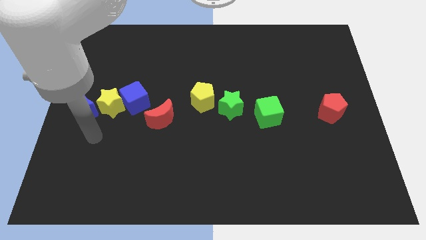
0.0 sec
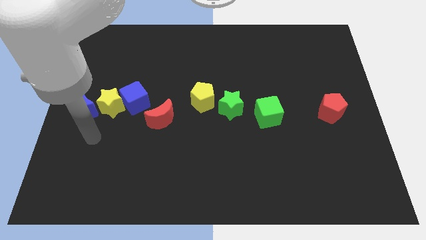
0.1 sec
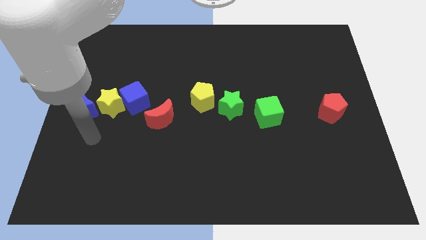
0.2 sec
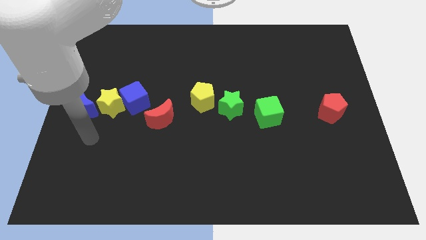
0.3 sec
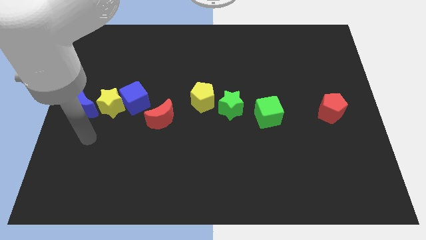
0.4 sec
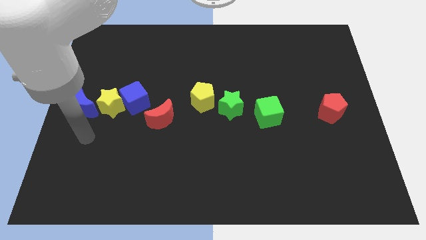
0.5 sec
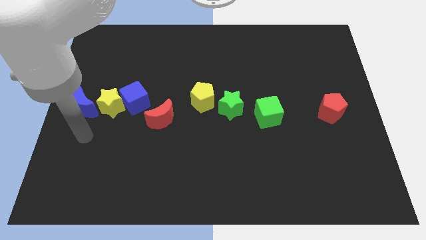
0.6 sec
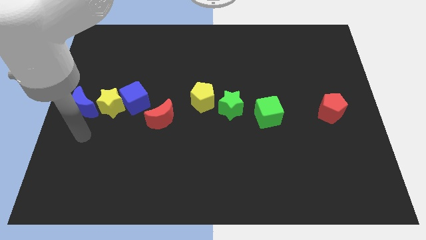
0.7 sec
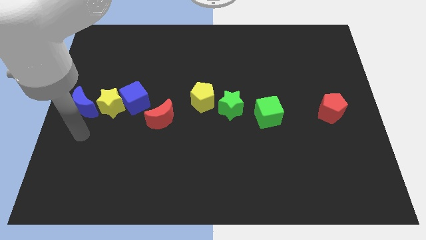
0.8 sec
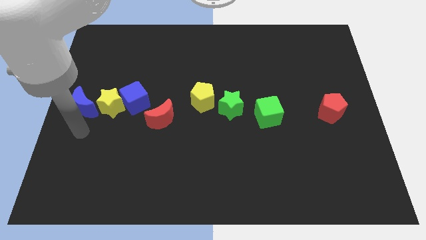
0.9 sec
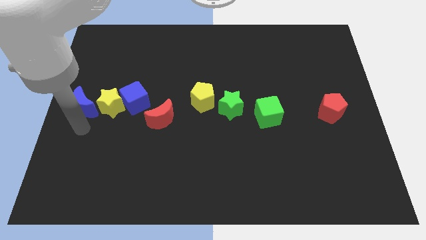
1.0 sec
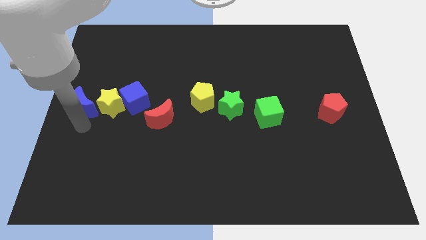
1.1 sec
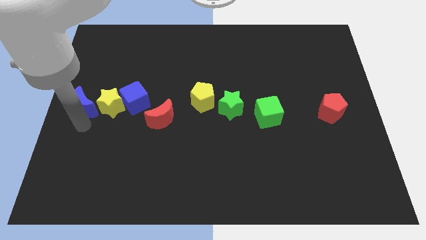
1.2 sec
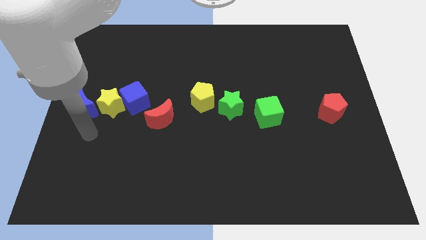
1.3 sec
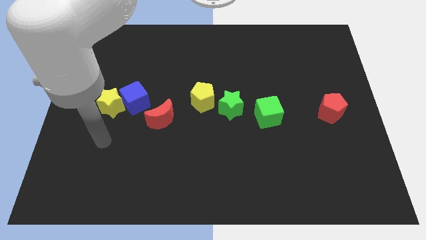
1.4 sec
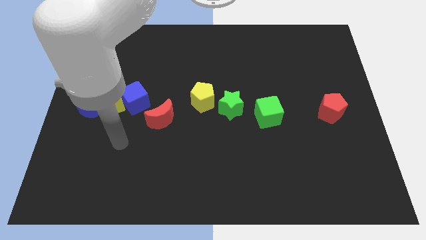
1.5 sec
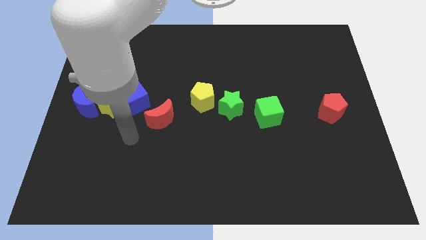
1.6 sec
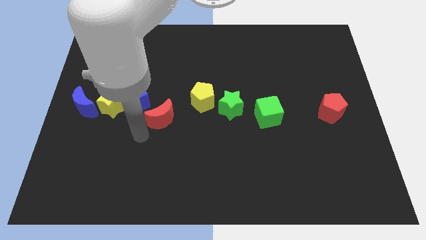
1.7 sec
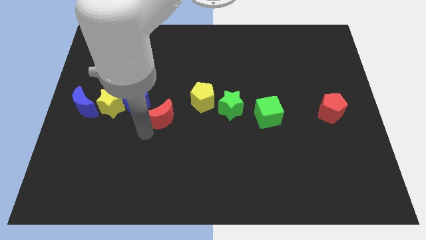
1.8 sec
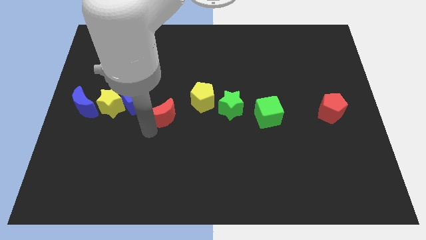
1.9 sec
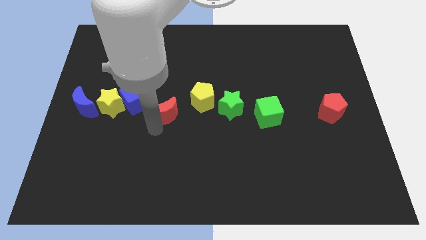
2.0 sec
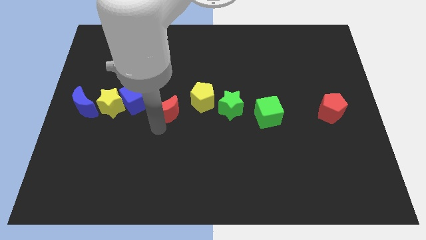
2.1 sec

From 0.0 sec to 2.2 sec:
move the red moon slightly to the top of the board

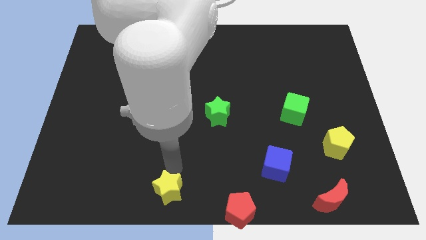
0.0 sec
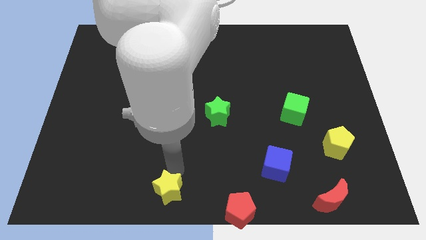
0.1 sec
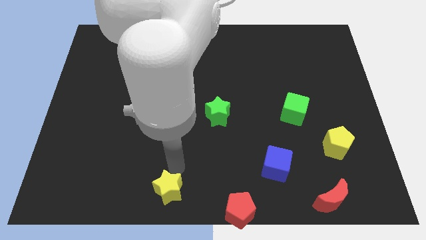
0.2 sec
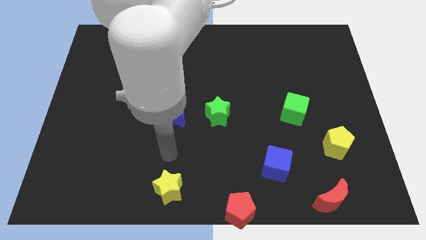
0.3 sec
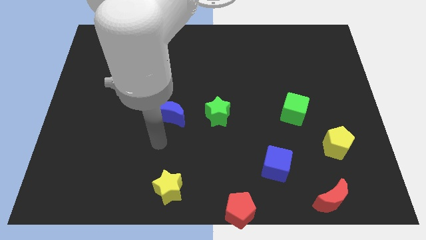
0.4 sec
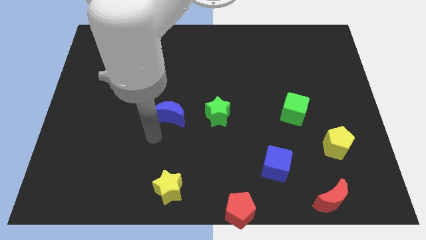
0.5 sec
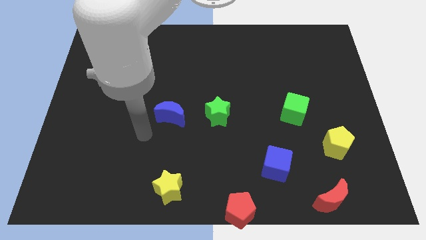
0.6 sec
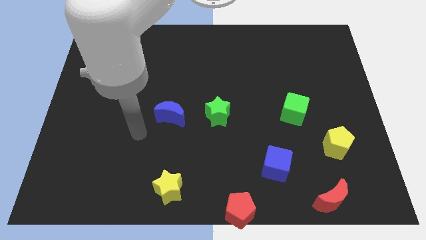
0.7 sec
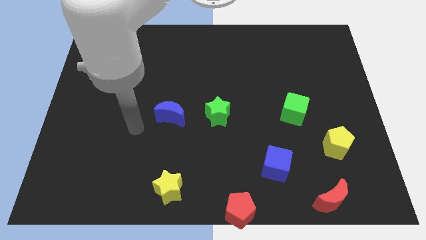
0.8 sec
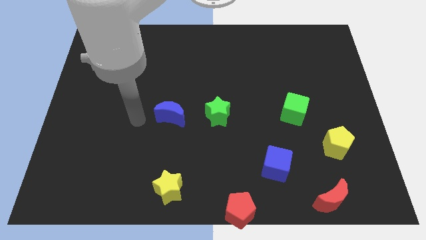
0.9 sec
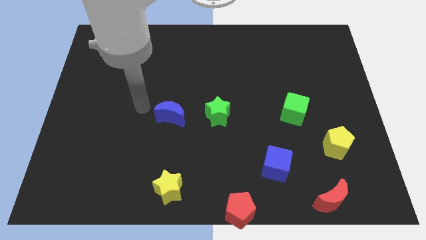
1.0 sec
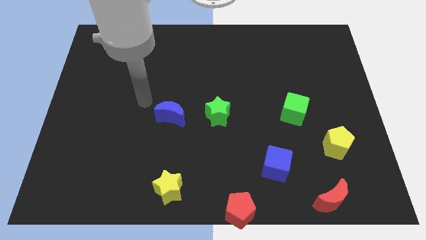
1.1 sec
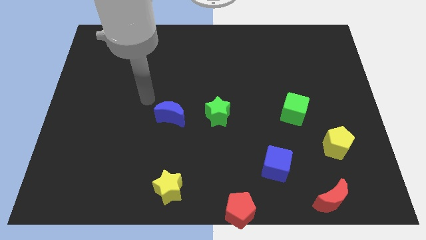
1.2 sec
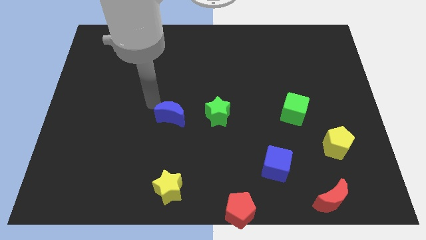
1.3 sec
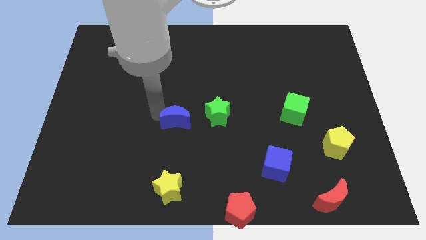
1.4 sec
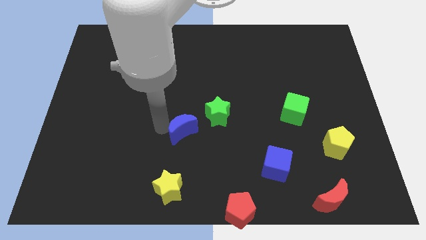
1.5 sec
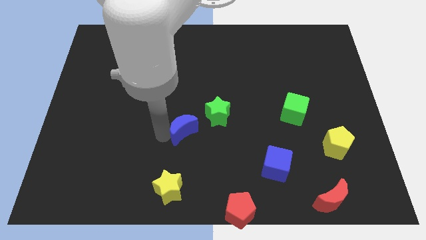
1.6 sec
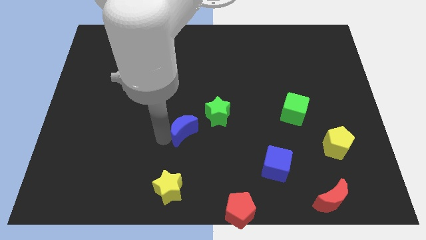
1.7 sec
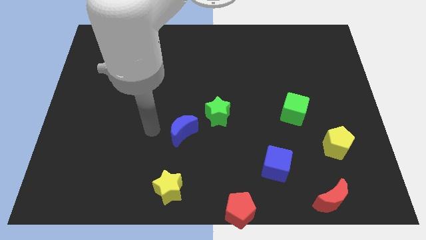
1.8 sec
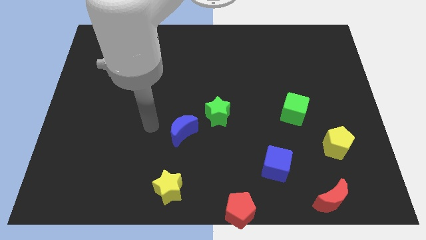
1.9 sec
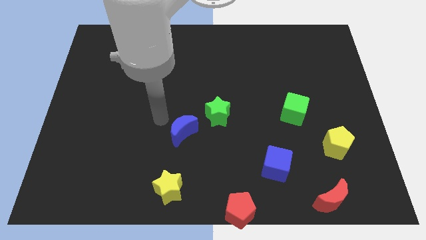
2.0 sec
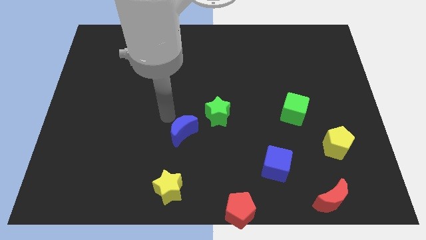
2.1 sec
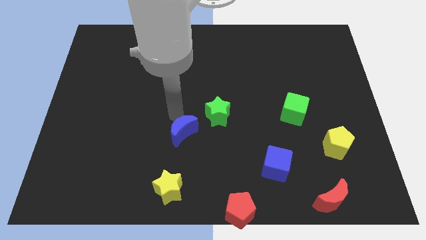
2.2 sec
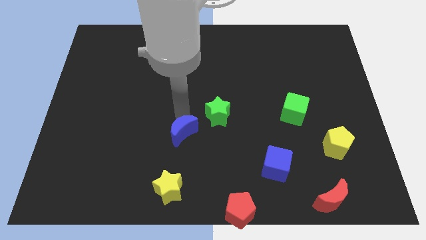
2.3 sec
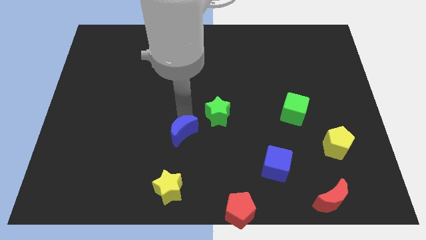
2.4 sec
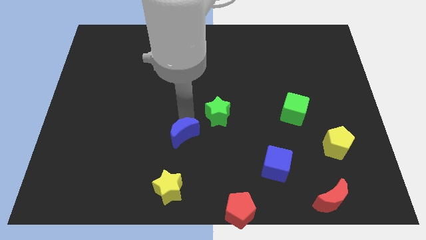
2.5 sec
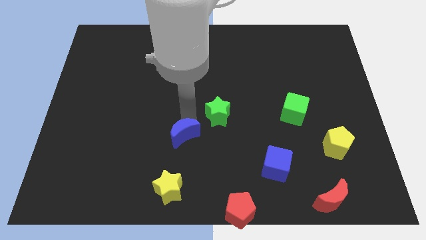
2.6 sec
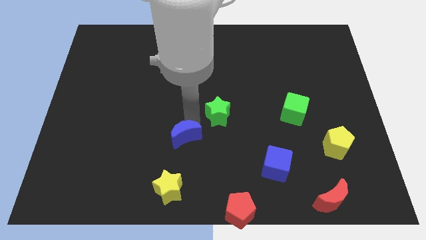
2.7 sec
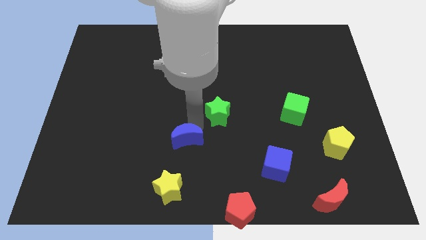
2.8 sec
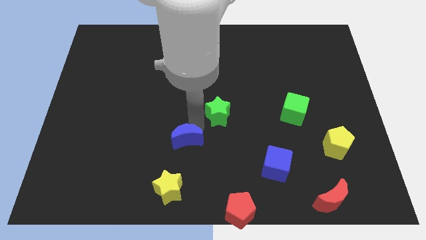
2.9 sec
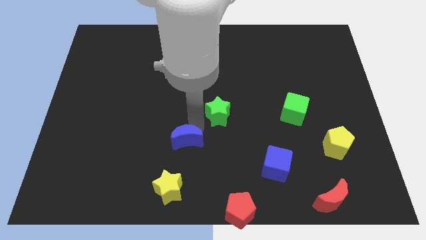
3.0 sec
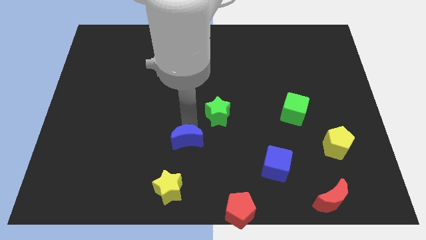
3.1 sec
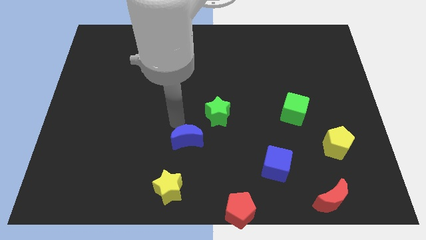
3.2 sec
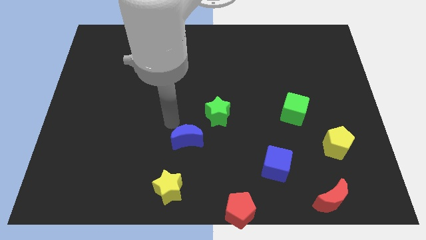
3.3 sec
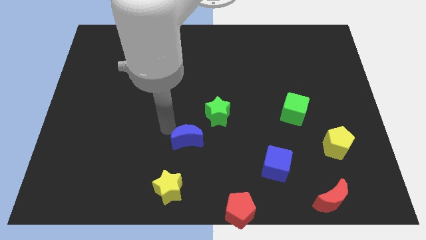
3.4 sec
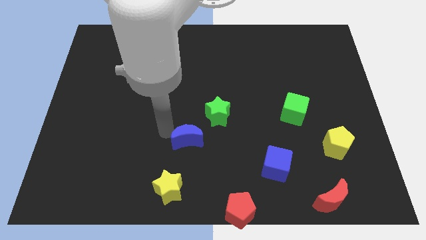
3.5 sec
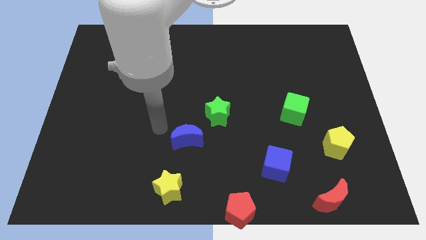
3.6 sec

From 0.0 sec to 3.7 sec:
push blue moon to the bottom slightly

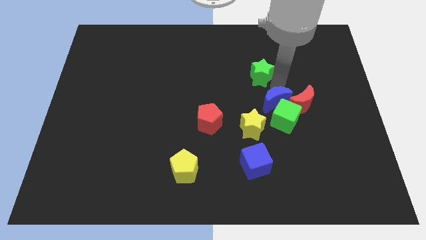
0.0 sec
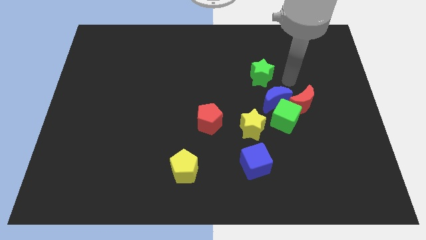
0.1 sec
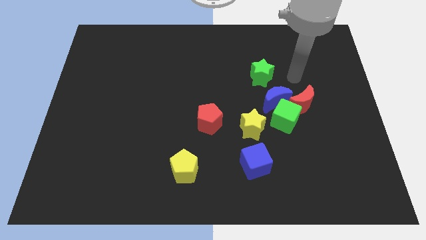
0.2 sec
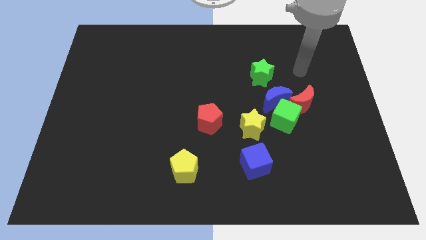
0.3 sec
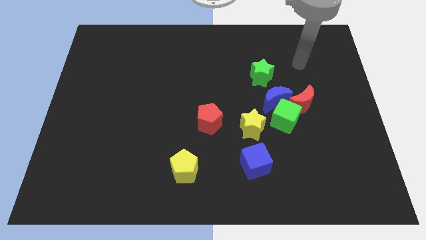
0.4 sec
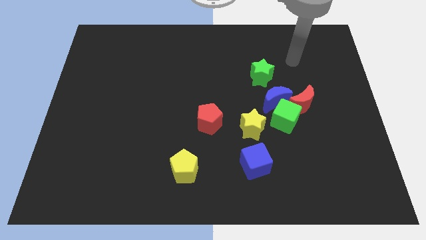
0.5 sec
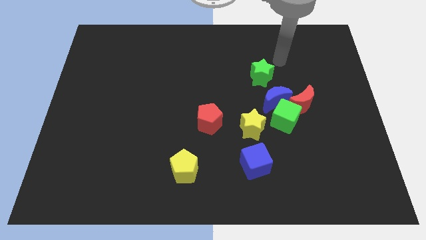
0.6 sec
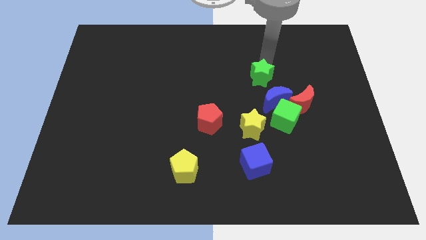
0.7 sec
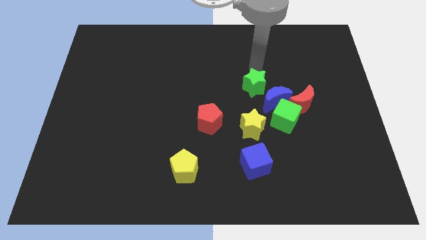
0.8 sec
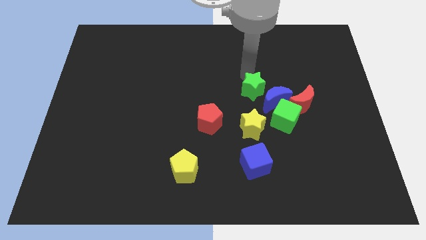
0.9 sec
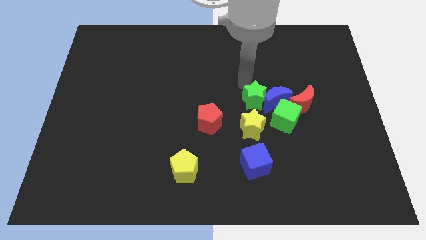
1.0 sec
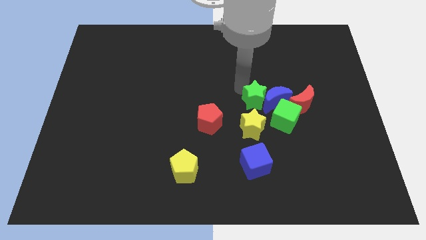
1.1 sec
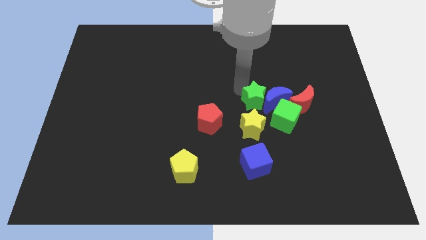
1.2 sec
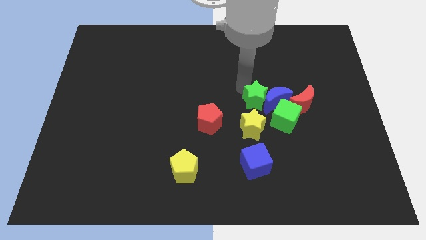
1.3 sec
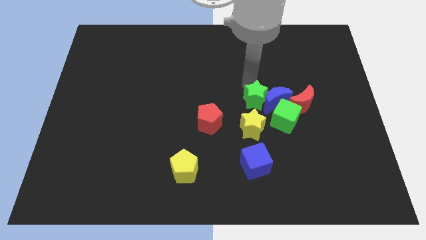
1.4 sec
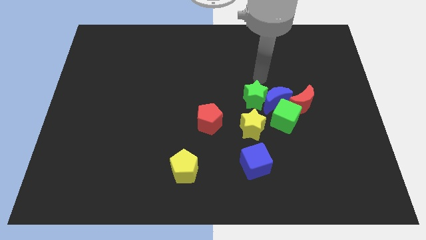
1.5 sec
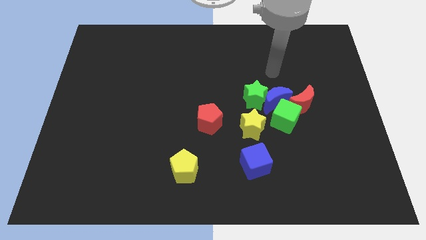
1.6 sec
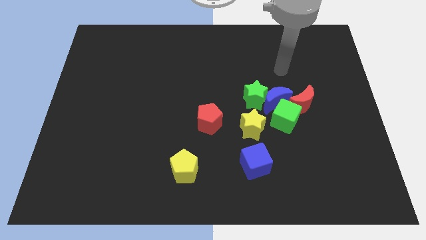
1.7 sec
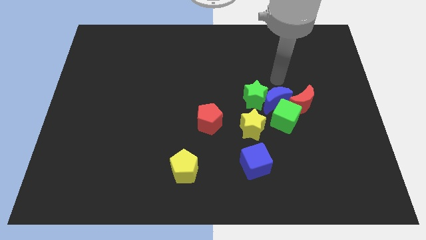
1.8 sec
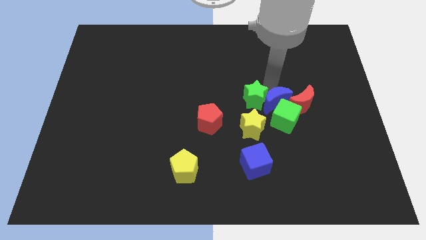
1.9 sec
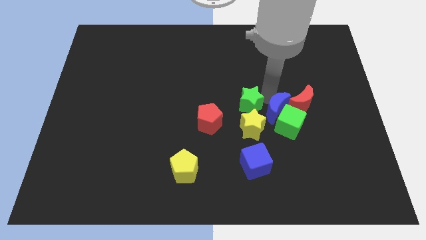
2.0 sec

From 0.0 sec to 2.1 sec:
push green star towards blue crescent

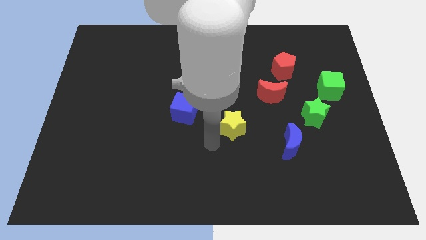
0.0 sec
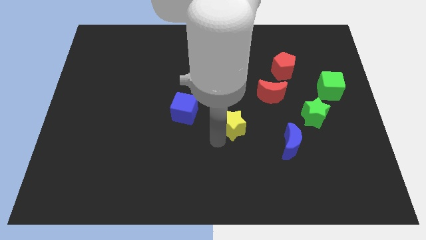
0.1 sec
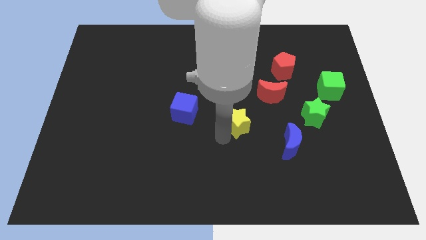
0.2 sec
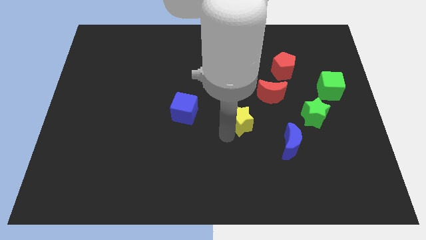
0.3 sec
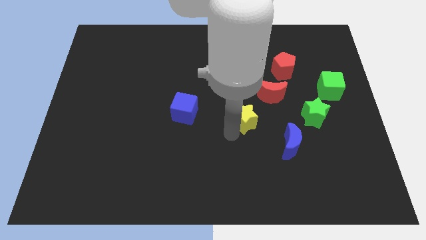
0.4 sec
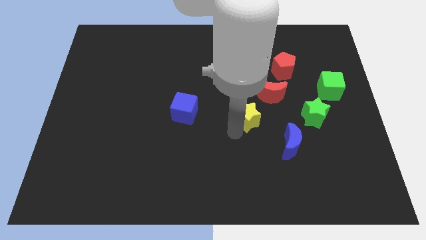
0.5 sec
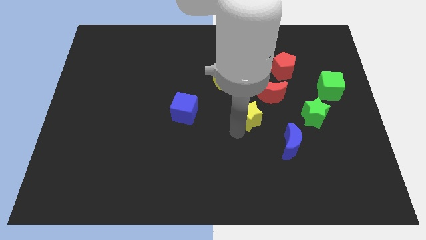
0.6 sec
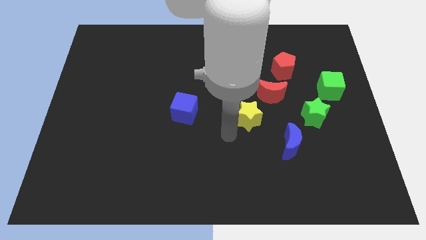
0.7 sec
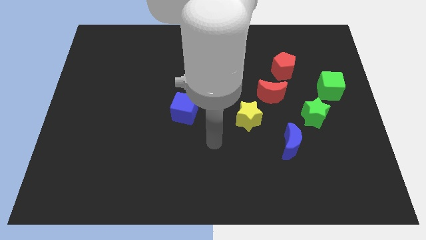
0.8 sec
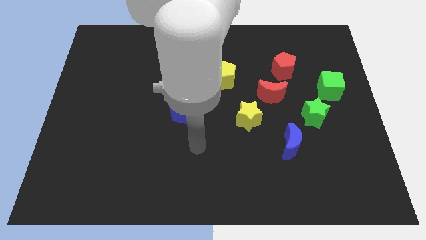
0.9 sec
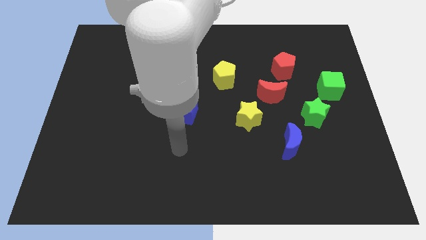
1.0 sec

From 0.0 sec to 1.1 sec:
push the yellow star below the red crescent
